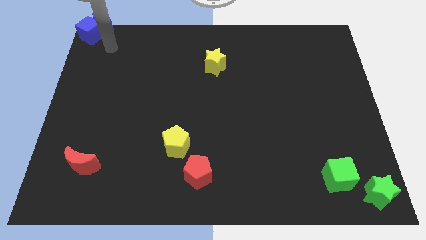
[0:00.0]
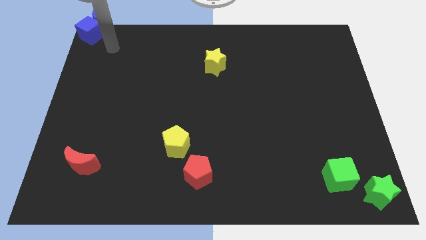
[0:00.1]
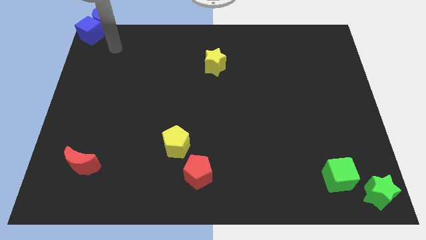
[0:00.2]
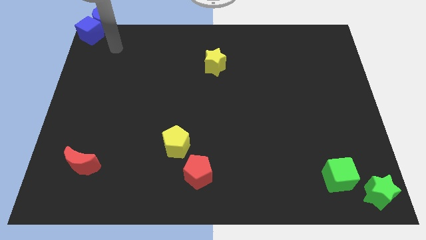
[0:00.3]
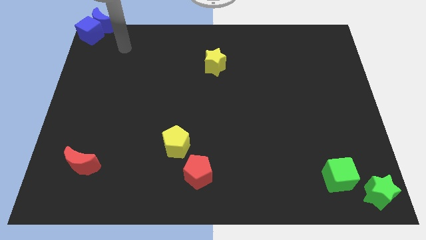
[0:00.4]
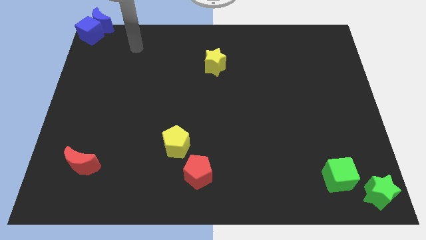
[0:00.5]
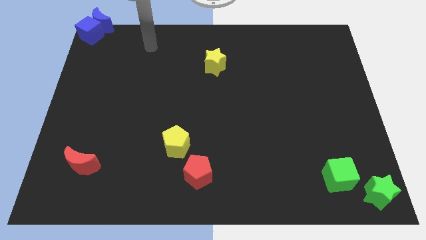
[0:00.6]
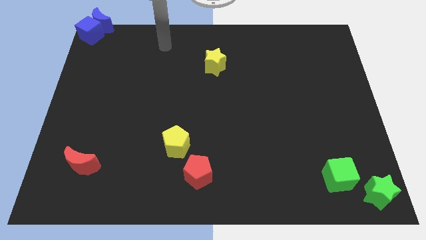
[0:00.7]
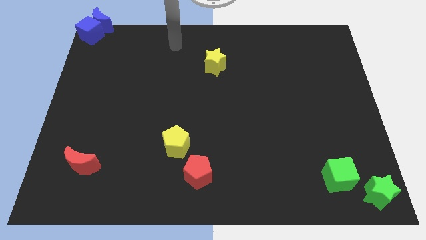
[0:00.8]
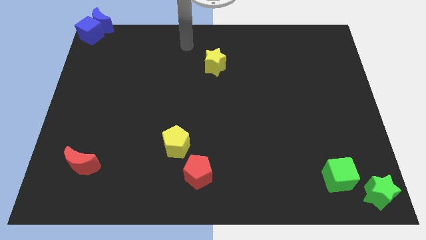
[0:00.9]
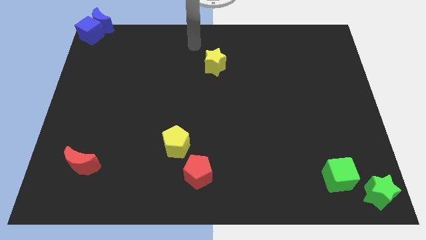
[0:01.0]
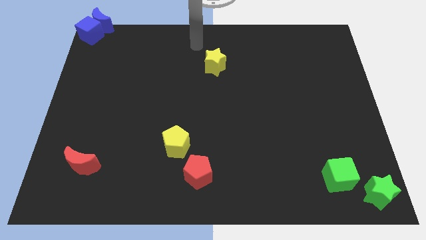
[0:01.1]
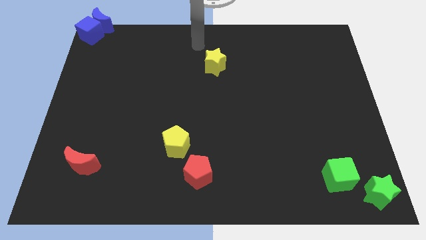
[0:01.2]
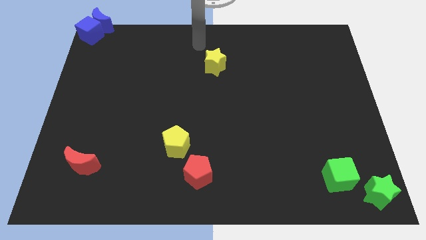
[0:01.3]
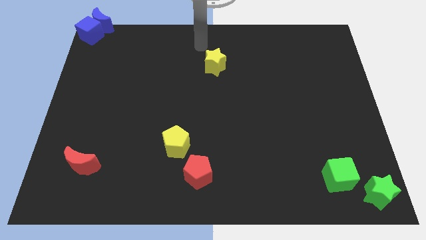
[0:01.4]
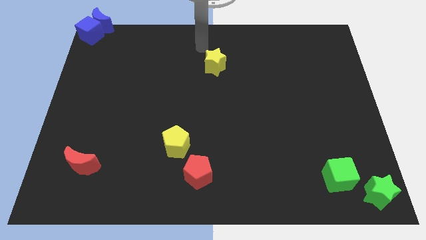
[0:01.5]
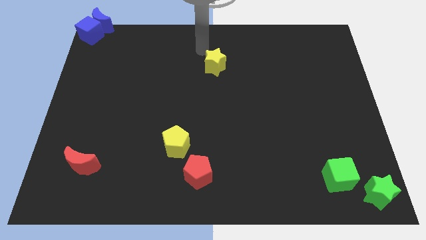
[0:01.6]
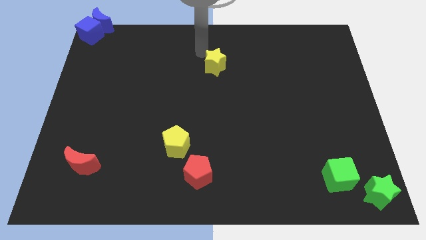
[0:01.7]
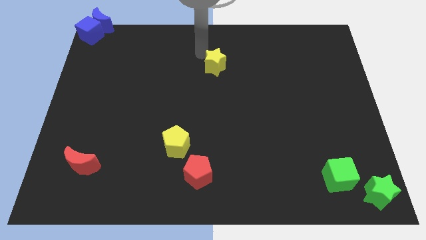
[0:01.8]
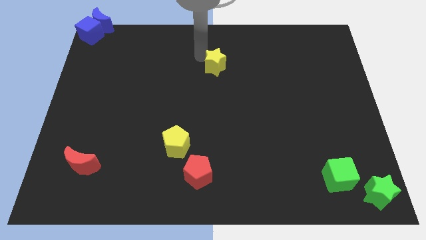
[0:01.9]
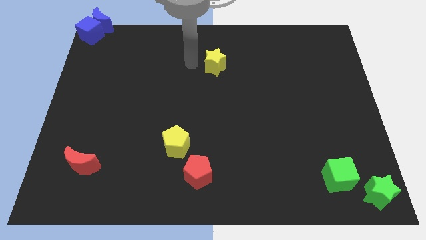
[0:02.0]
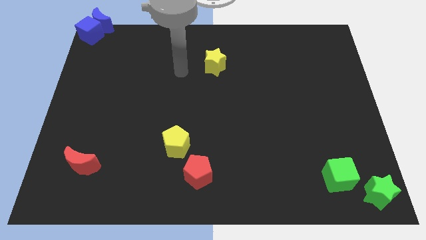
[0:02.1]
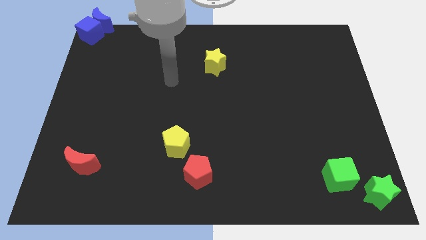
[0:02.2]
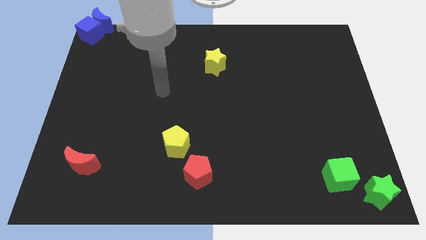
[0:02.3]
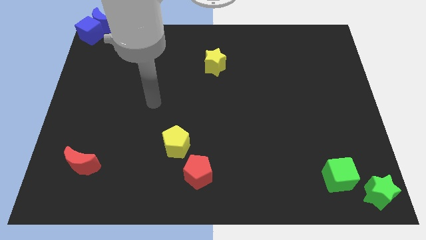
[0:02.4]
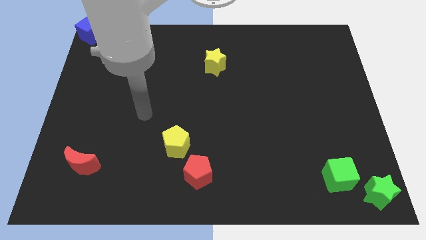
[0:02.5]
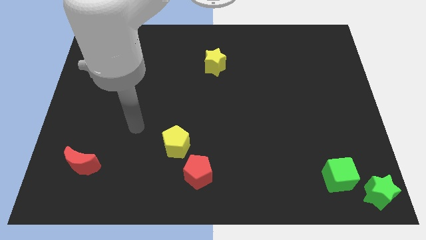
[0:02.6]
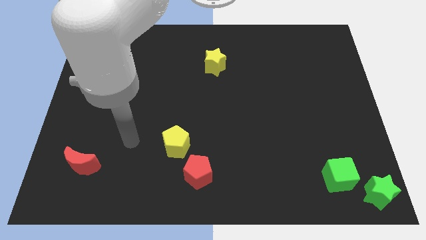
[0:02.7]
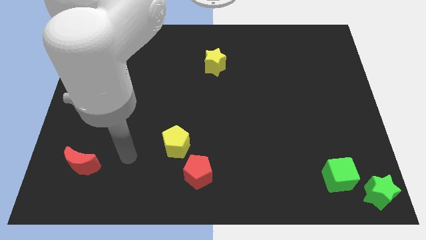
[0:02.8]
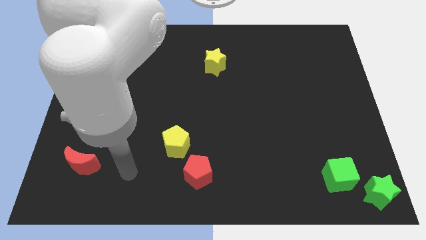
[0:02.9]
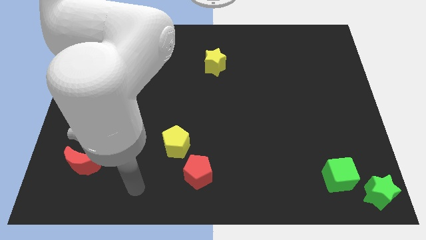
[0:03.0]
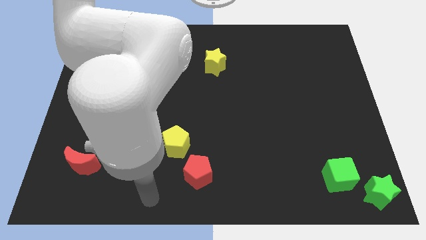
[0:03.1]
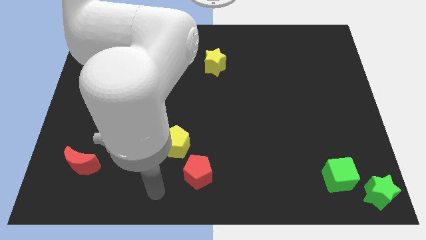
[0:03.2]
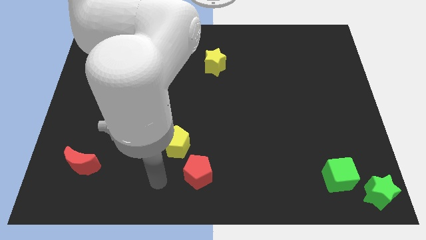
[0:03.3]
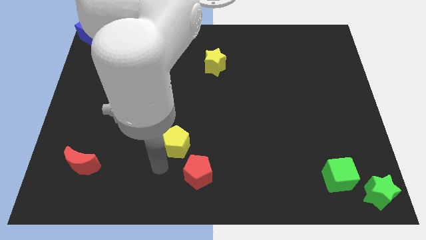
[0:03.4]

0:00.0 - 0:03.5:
place your arm to the left of the red pentagon

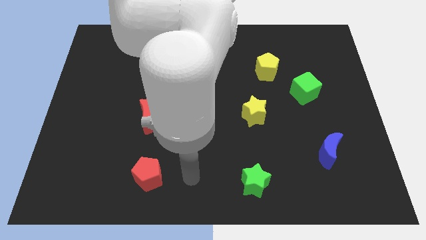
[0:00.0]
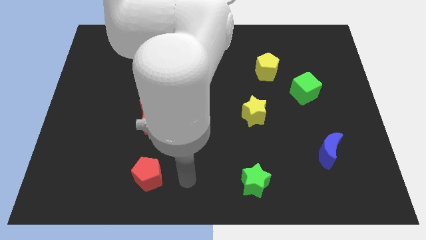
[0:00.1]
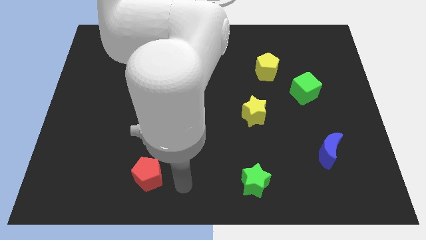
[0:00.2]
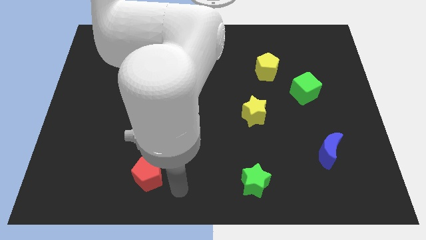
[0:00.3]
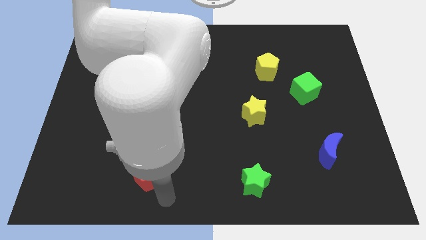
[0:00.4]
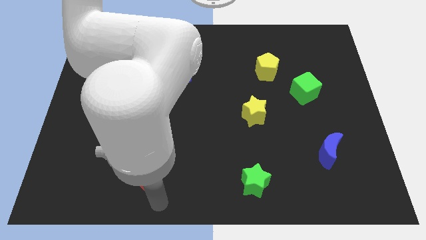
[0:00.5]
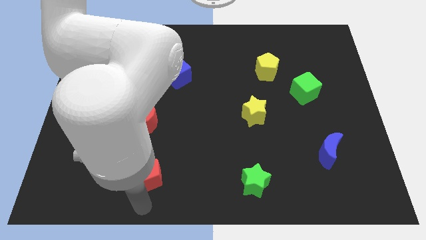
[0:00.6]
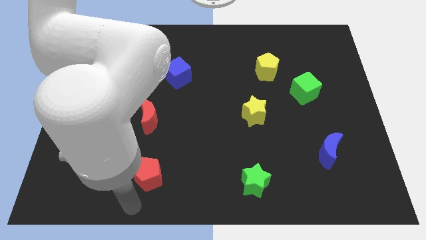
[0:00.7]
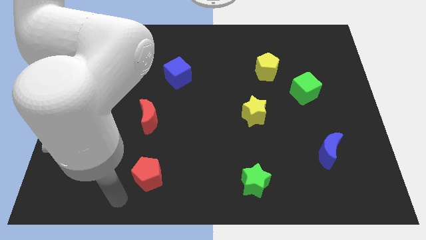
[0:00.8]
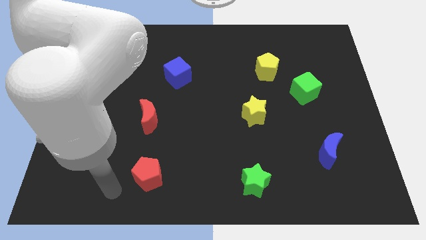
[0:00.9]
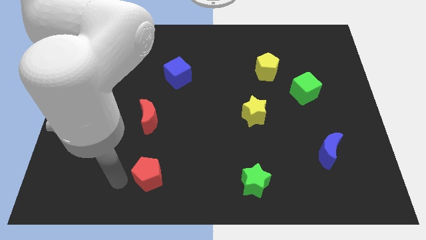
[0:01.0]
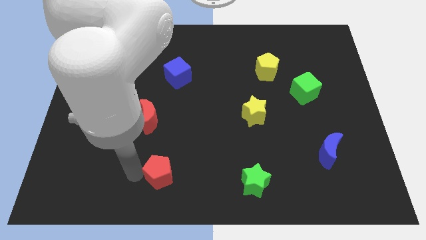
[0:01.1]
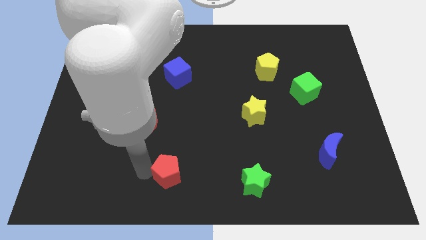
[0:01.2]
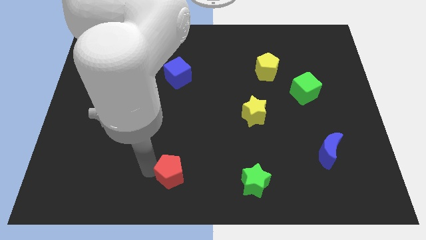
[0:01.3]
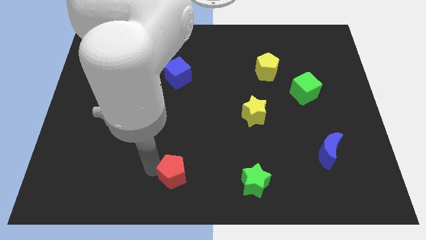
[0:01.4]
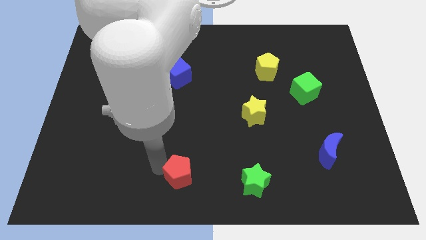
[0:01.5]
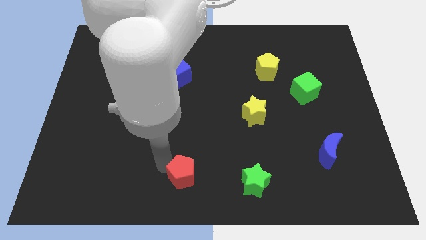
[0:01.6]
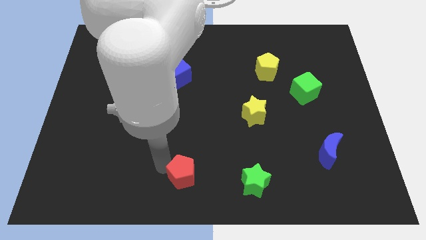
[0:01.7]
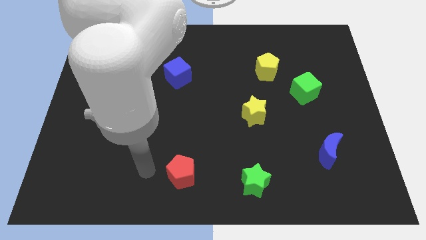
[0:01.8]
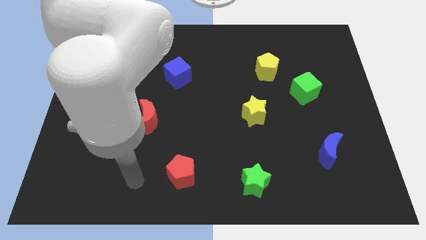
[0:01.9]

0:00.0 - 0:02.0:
move red pentagon slightly right

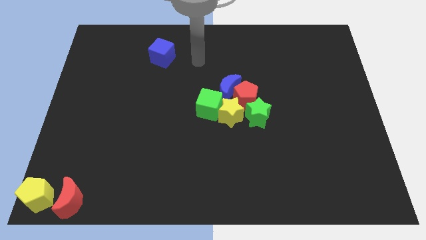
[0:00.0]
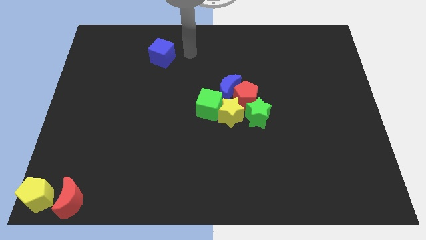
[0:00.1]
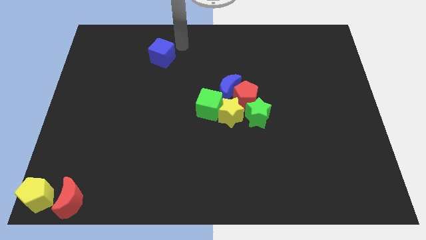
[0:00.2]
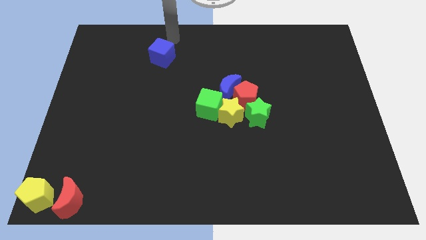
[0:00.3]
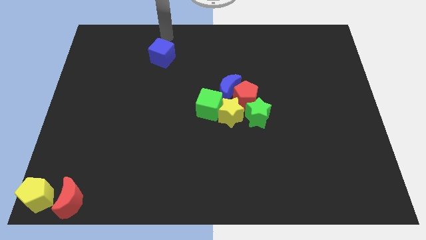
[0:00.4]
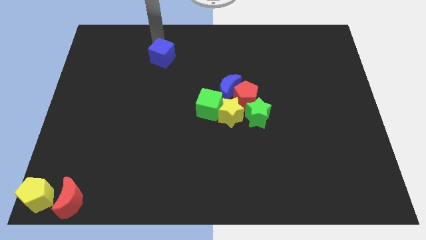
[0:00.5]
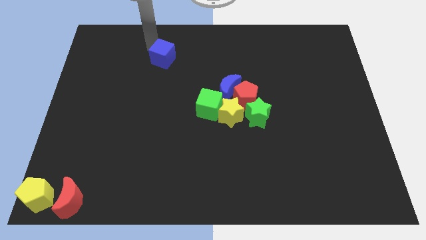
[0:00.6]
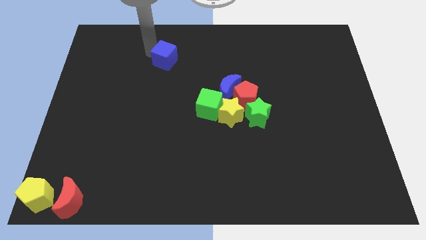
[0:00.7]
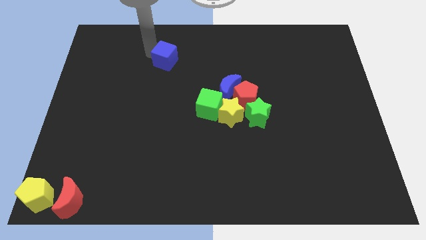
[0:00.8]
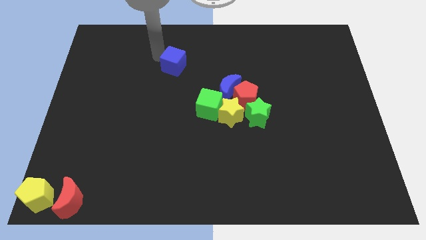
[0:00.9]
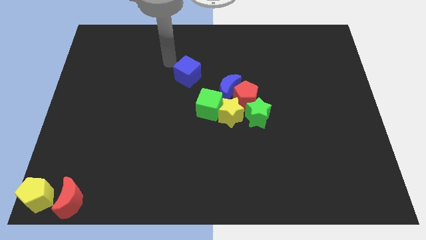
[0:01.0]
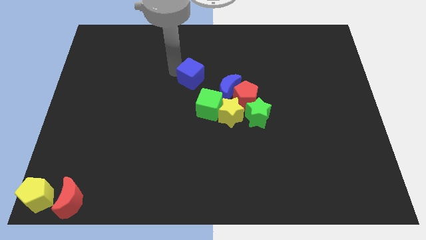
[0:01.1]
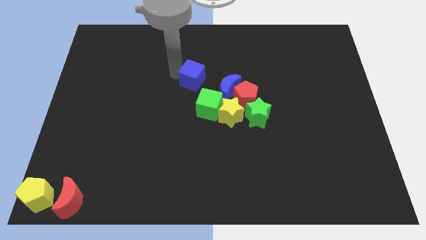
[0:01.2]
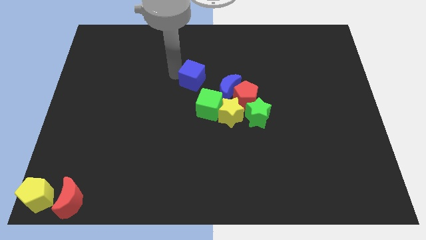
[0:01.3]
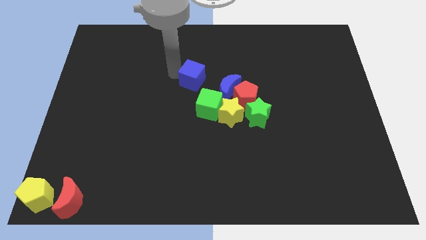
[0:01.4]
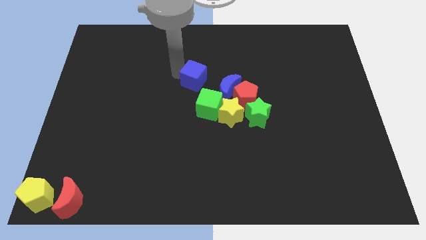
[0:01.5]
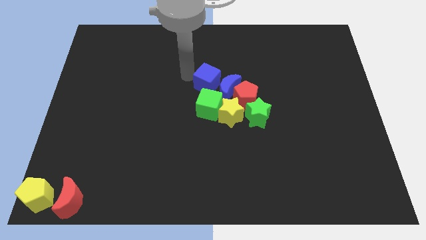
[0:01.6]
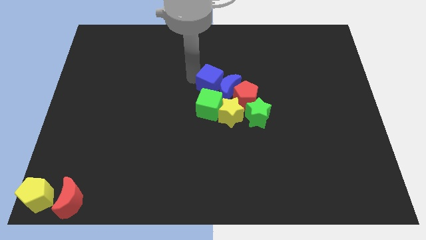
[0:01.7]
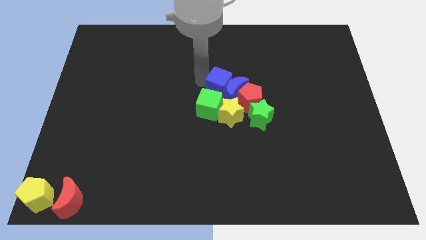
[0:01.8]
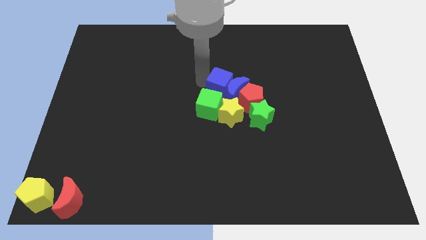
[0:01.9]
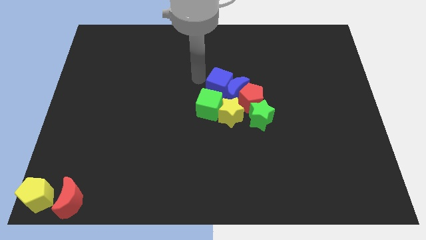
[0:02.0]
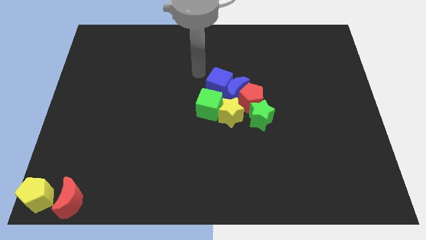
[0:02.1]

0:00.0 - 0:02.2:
slide the blue cube into the blue moon

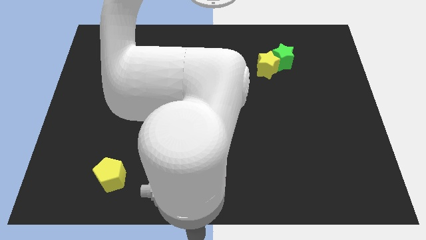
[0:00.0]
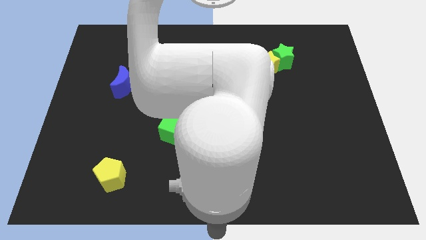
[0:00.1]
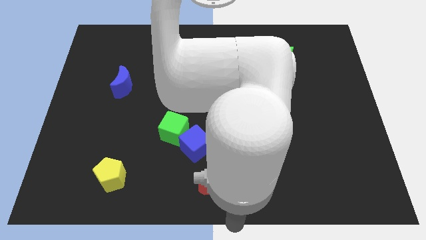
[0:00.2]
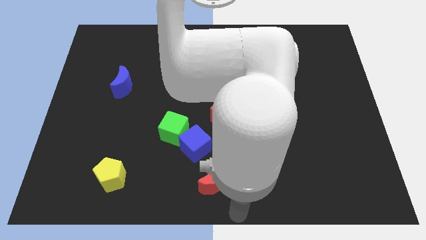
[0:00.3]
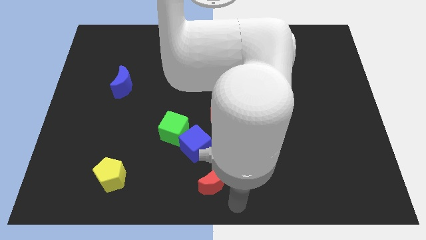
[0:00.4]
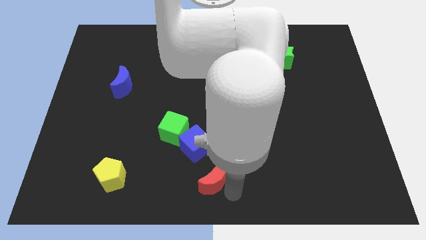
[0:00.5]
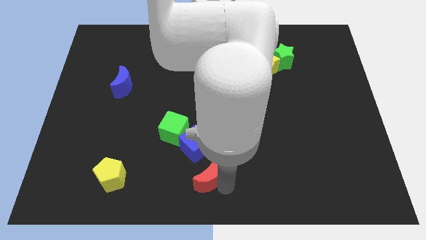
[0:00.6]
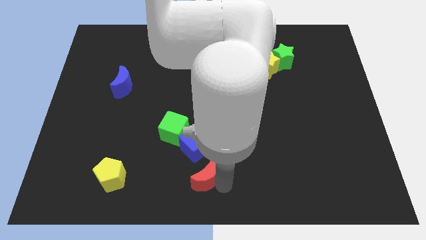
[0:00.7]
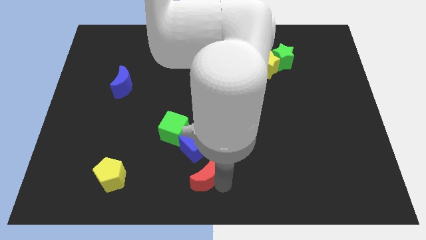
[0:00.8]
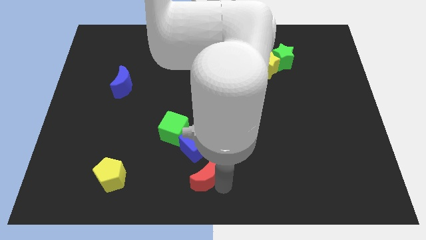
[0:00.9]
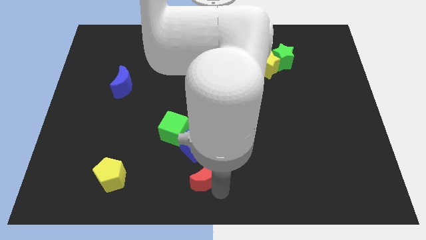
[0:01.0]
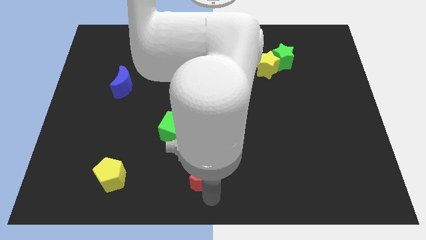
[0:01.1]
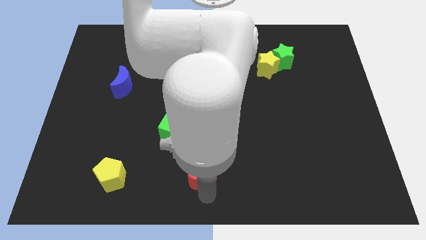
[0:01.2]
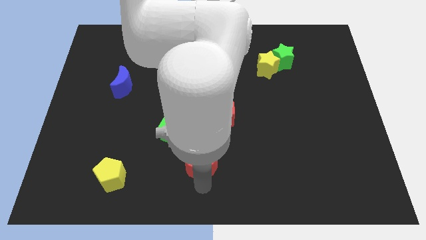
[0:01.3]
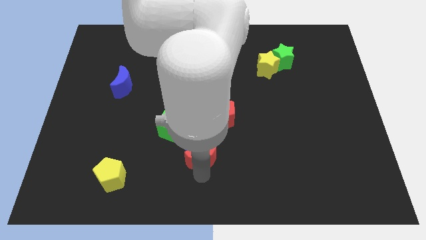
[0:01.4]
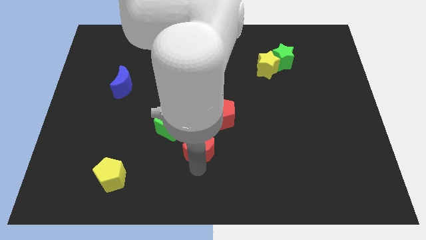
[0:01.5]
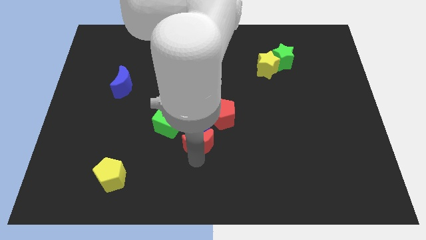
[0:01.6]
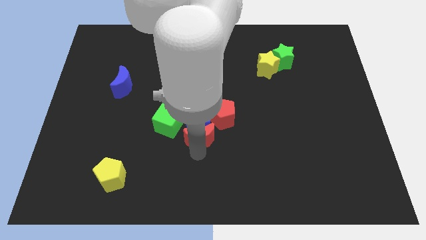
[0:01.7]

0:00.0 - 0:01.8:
push the red moon into the blue cube
